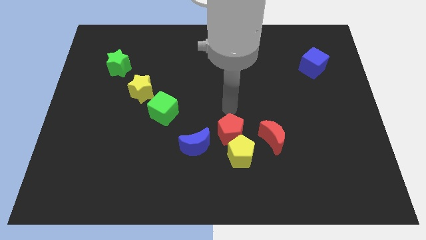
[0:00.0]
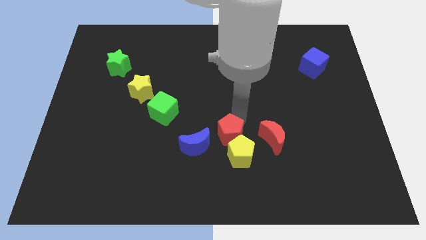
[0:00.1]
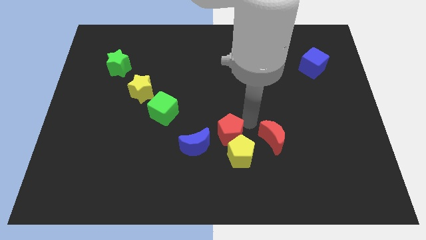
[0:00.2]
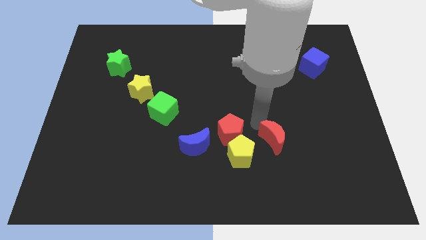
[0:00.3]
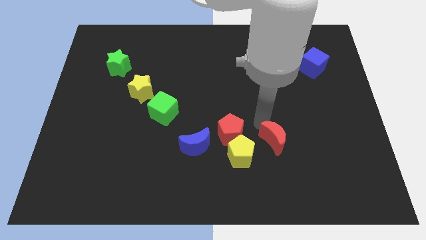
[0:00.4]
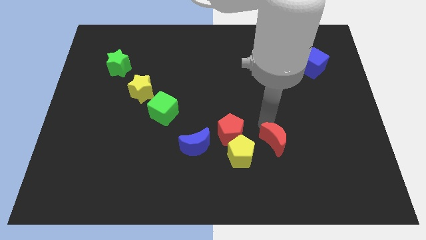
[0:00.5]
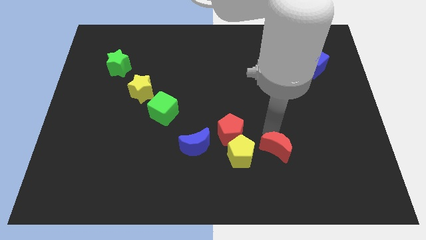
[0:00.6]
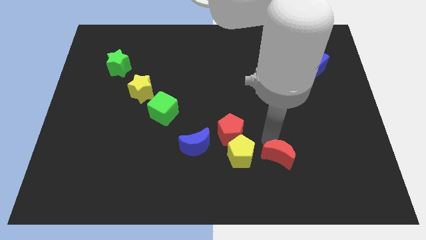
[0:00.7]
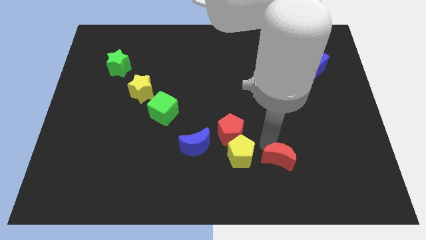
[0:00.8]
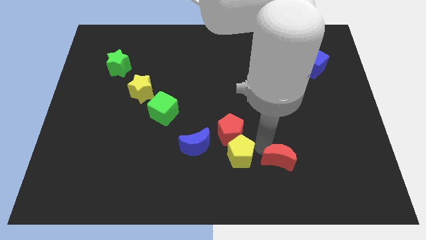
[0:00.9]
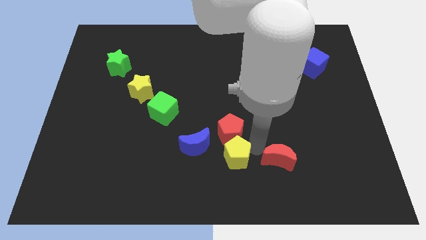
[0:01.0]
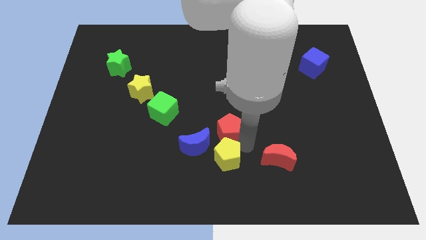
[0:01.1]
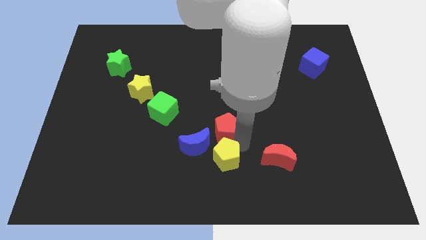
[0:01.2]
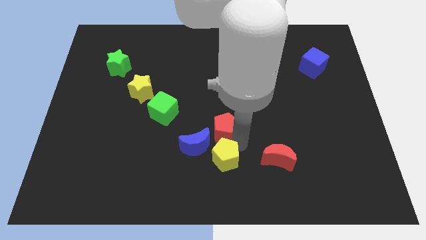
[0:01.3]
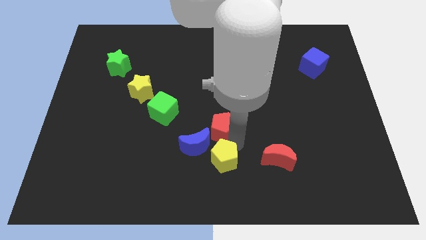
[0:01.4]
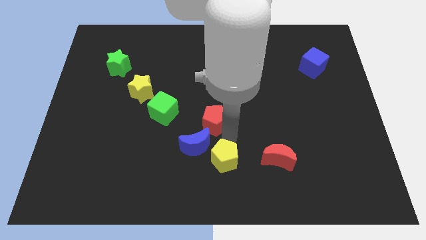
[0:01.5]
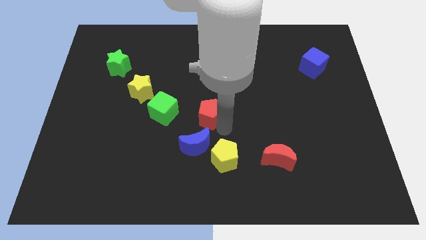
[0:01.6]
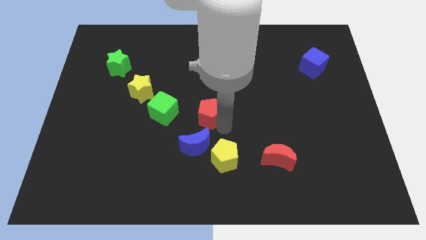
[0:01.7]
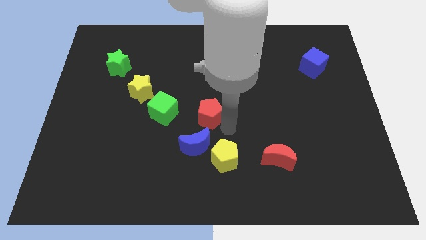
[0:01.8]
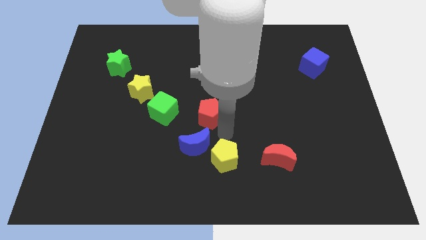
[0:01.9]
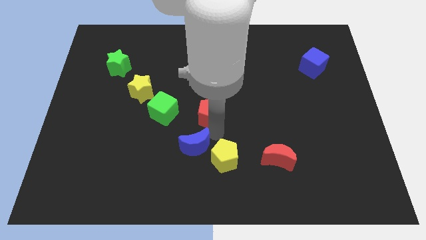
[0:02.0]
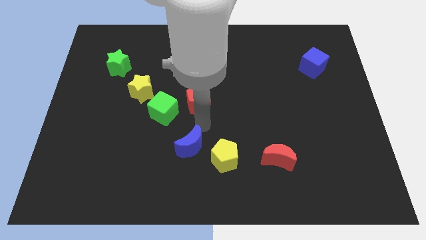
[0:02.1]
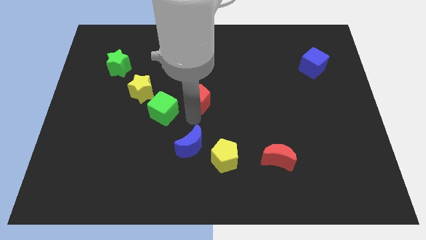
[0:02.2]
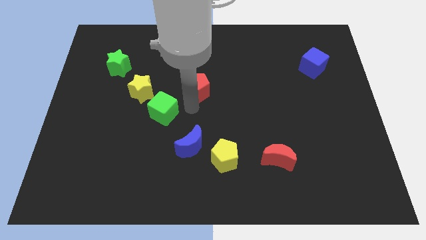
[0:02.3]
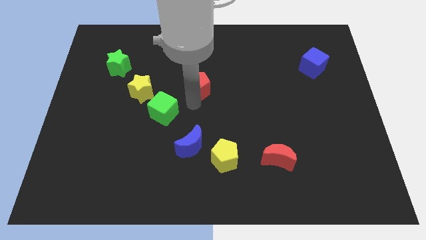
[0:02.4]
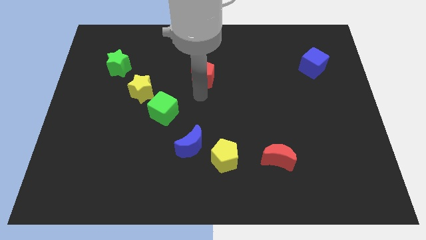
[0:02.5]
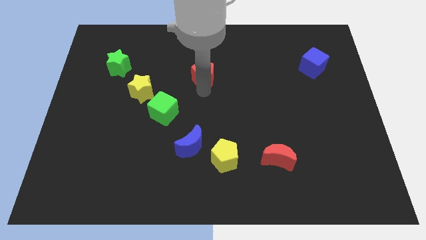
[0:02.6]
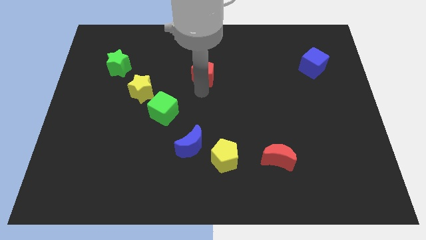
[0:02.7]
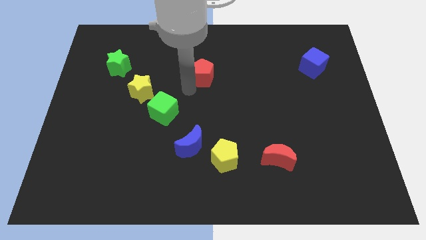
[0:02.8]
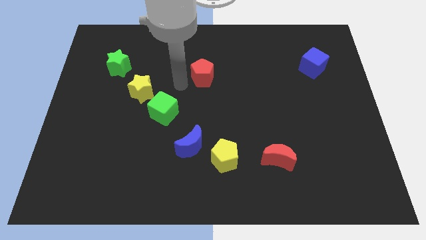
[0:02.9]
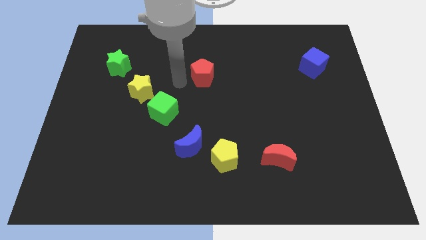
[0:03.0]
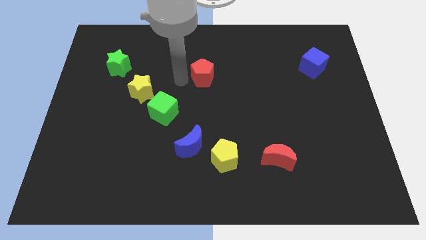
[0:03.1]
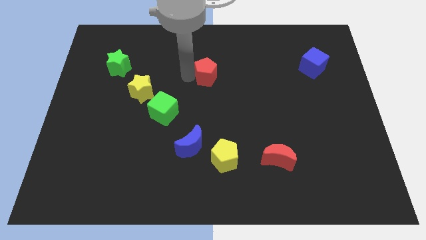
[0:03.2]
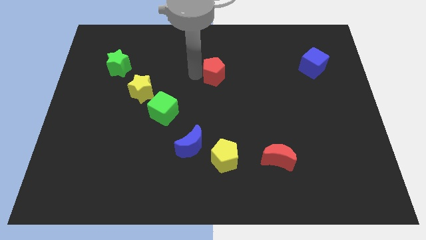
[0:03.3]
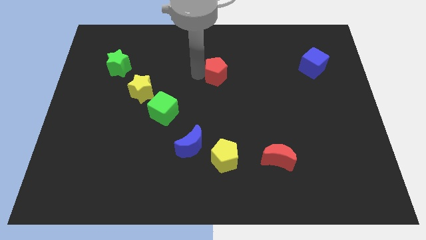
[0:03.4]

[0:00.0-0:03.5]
separate the red pentagon from the yellow pentagon

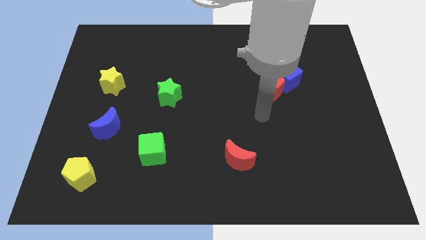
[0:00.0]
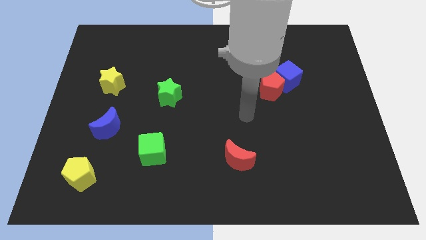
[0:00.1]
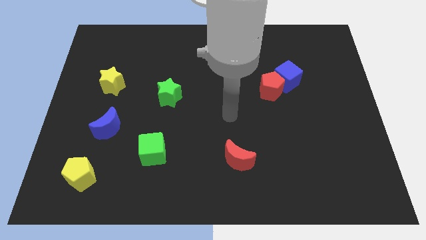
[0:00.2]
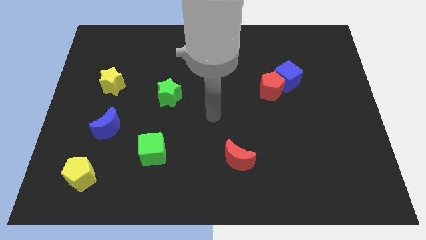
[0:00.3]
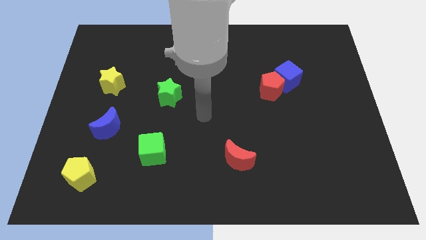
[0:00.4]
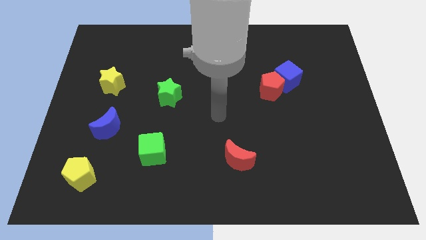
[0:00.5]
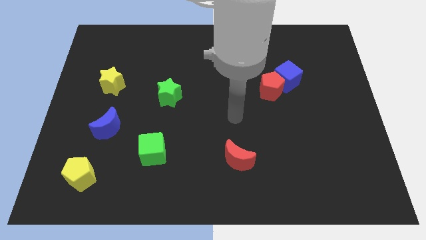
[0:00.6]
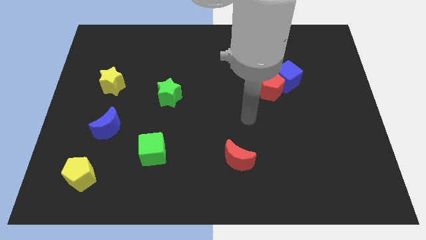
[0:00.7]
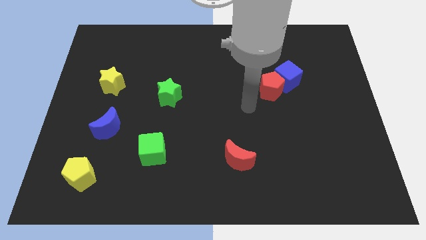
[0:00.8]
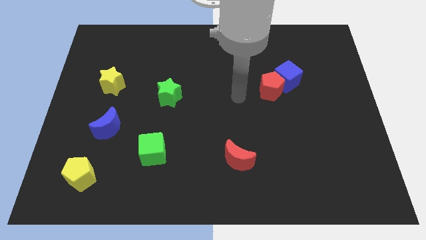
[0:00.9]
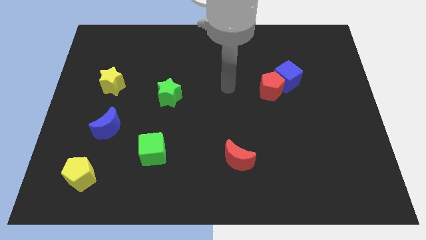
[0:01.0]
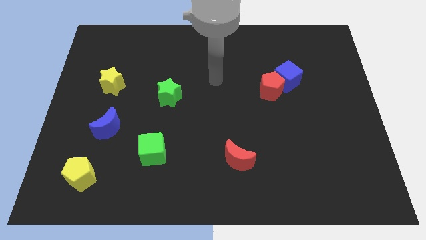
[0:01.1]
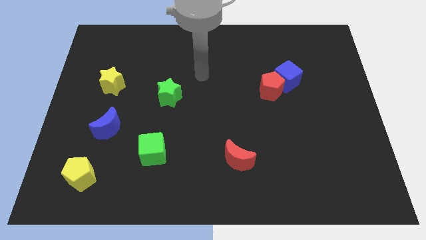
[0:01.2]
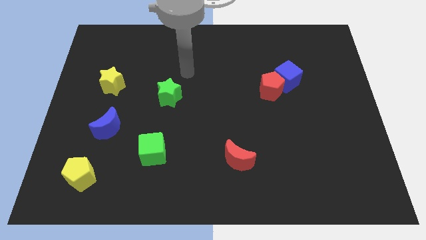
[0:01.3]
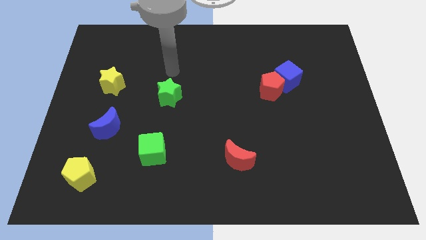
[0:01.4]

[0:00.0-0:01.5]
place your hand above the green star

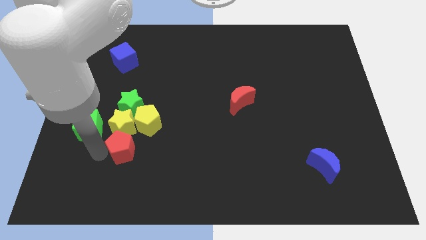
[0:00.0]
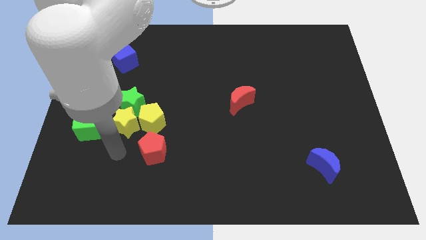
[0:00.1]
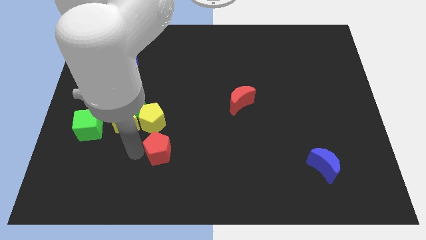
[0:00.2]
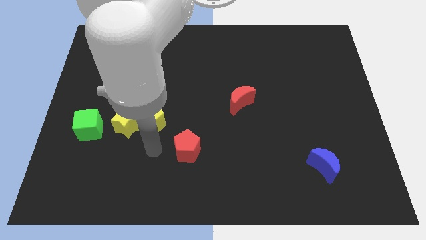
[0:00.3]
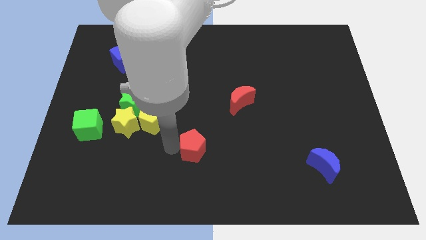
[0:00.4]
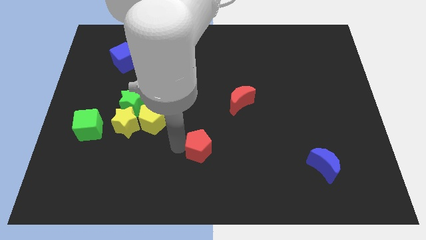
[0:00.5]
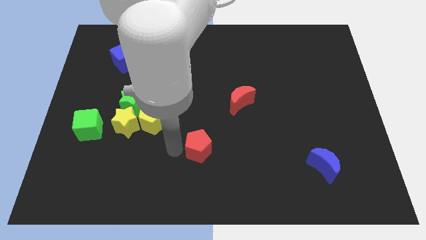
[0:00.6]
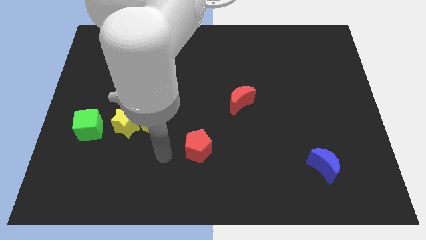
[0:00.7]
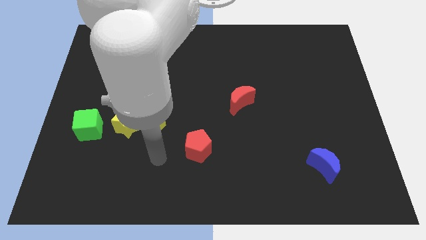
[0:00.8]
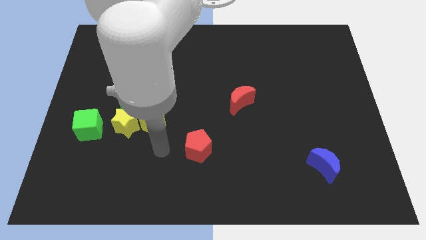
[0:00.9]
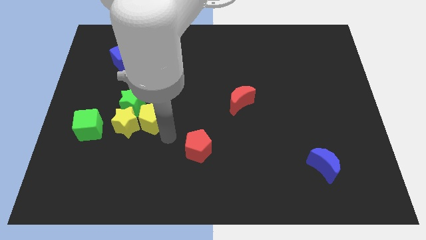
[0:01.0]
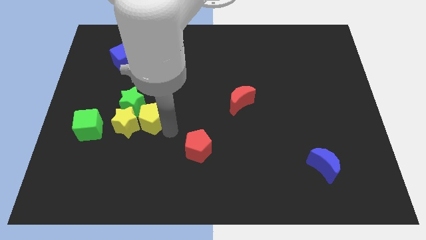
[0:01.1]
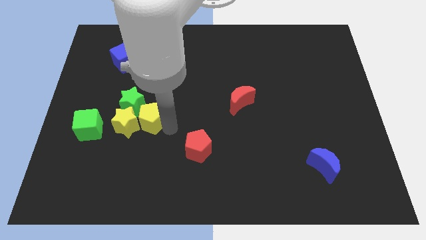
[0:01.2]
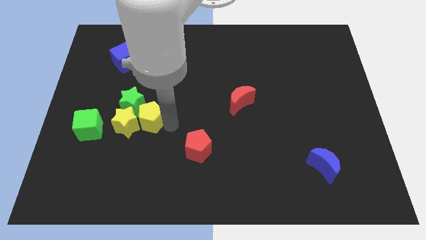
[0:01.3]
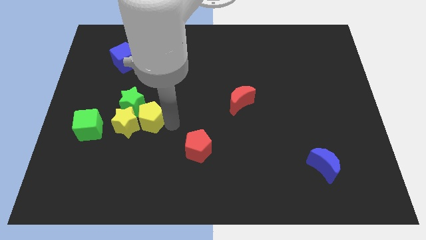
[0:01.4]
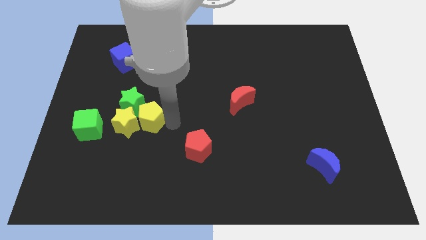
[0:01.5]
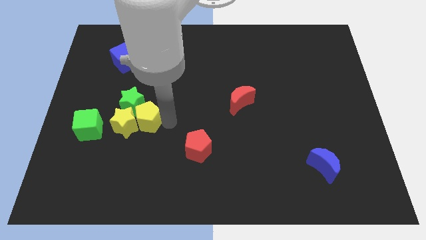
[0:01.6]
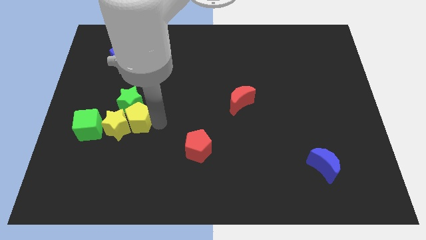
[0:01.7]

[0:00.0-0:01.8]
push the red pentagon towards the center of the board

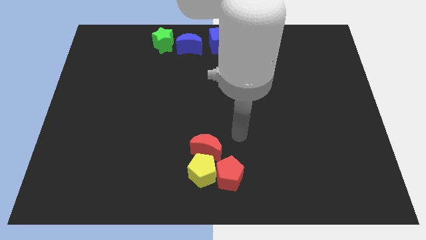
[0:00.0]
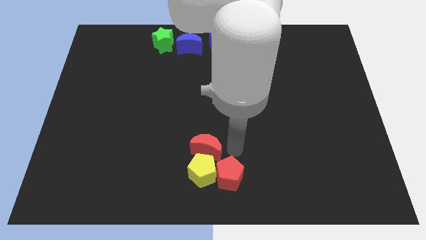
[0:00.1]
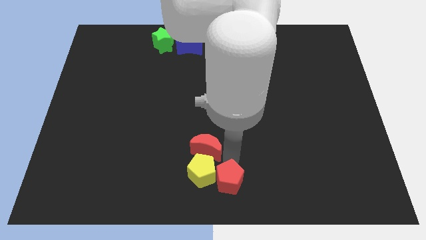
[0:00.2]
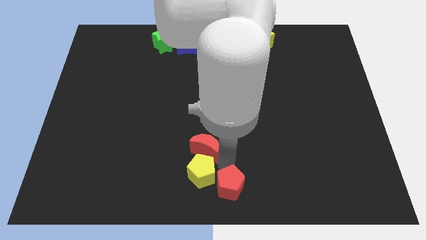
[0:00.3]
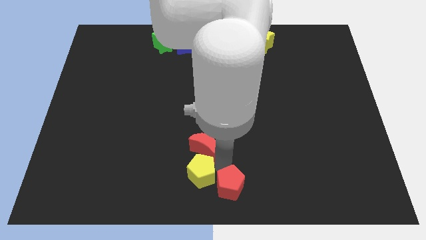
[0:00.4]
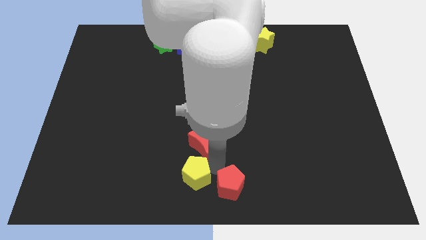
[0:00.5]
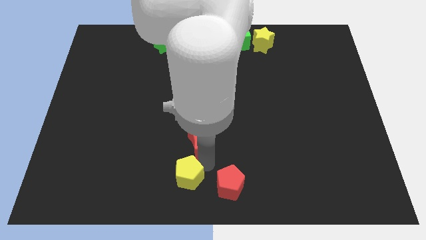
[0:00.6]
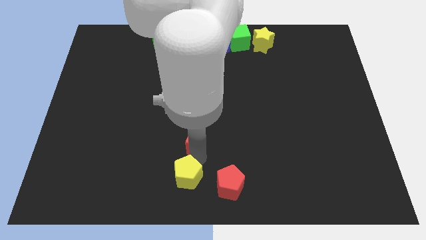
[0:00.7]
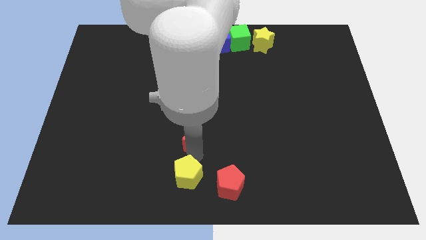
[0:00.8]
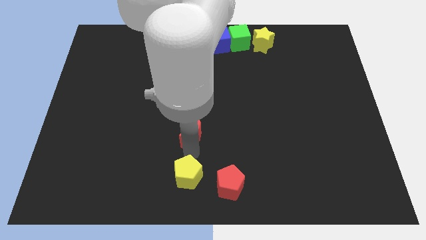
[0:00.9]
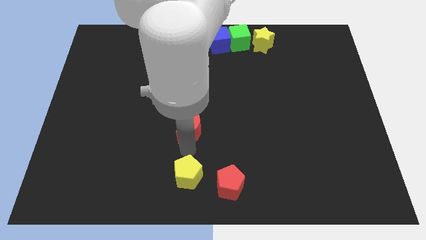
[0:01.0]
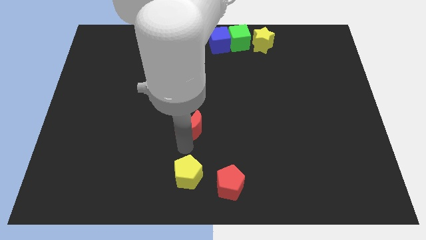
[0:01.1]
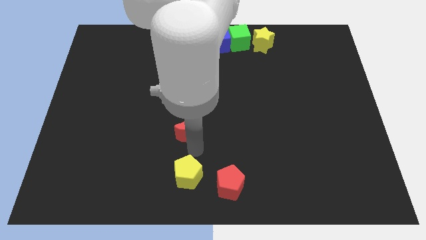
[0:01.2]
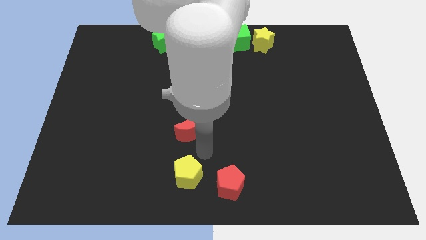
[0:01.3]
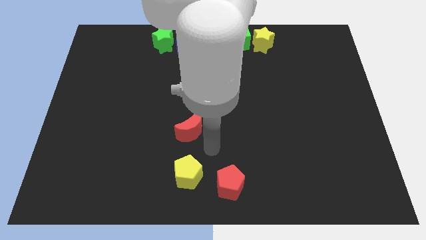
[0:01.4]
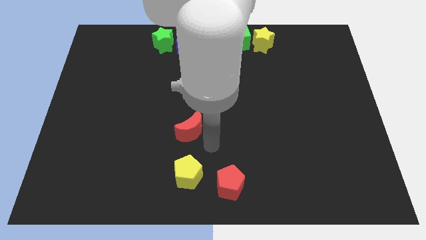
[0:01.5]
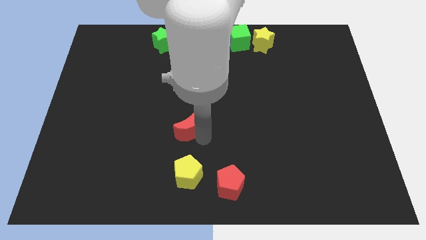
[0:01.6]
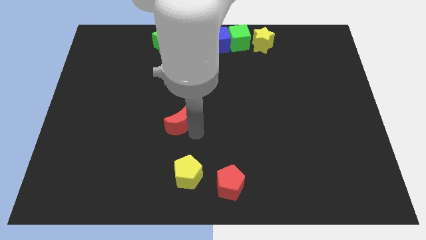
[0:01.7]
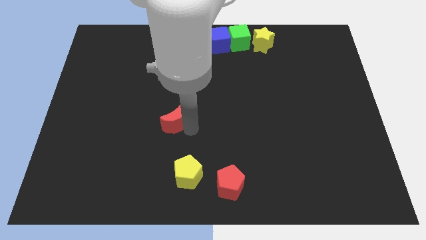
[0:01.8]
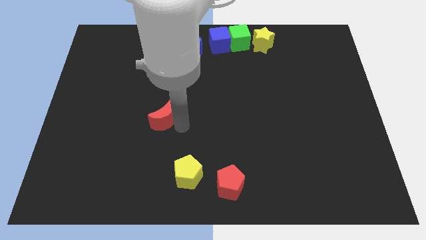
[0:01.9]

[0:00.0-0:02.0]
seperate the red moon yellow pentagon and red pentagon away from each other

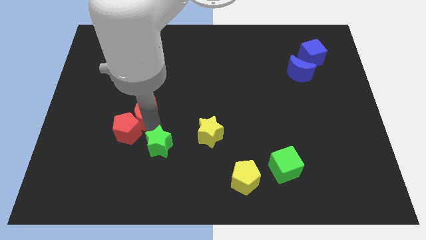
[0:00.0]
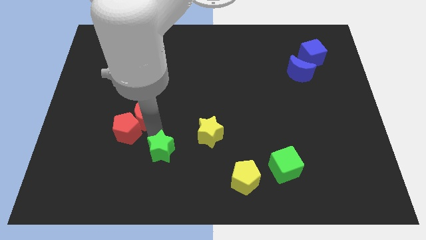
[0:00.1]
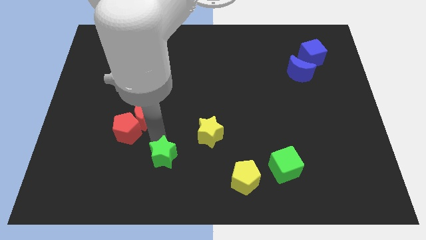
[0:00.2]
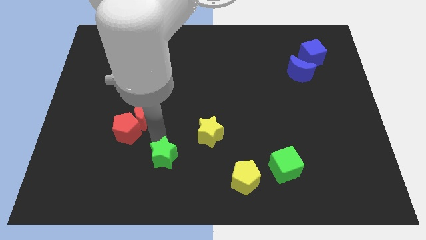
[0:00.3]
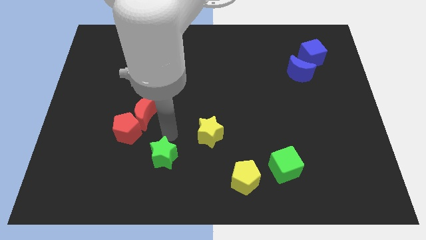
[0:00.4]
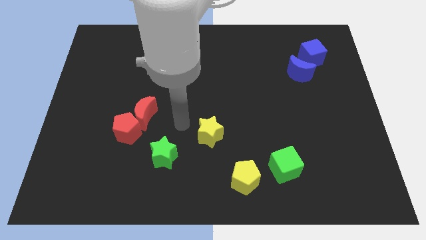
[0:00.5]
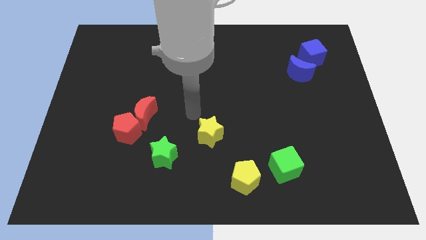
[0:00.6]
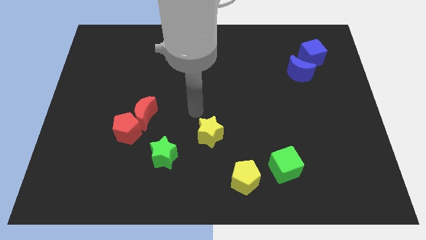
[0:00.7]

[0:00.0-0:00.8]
separate green star from red moon
